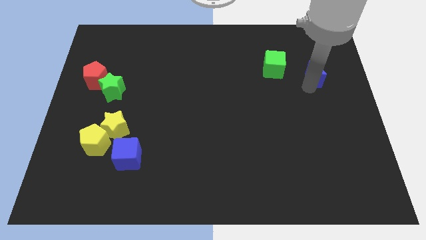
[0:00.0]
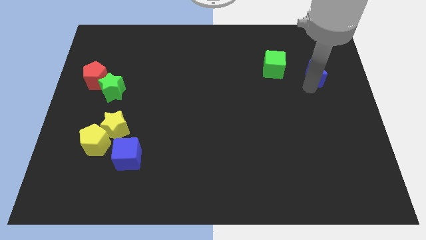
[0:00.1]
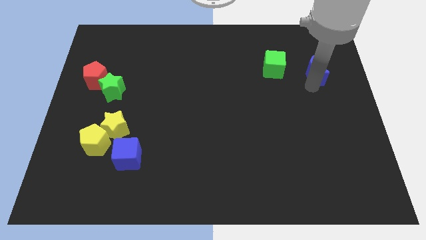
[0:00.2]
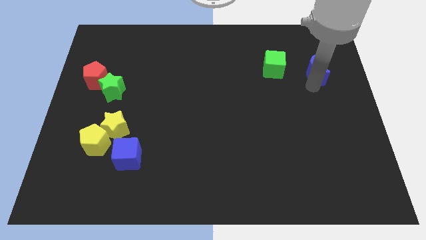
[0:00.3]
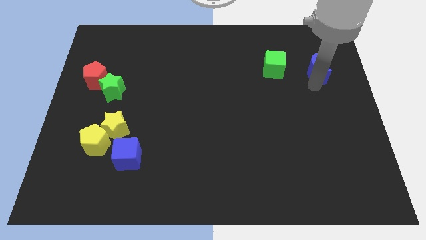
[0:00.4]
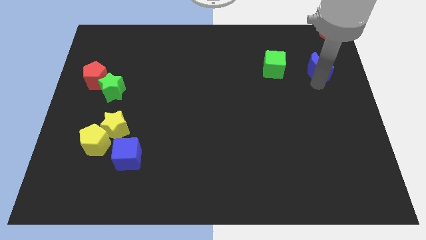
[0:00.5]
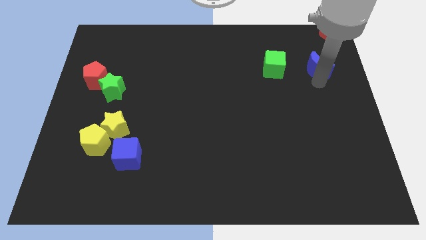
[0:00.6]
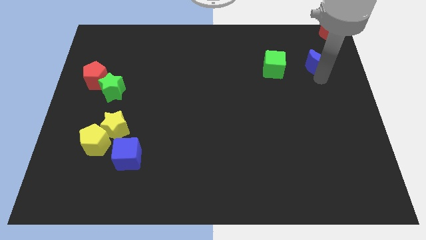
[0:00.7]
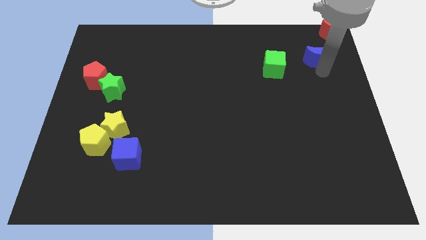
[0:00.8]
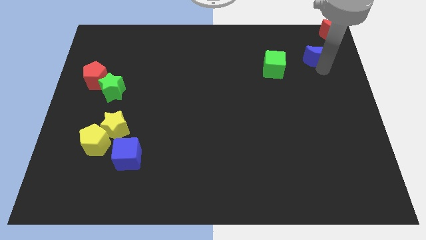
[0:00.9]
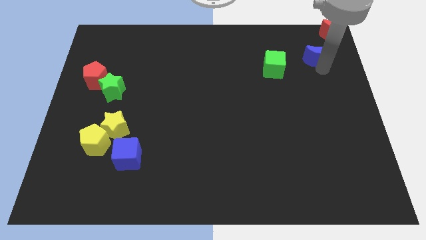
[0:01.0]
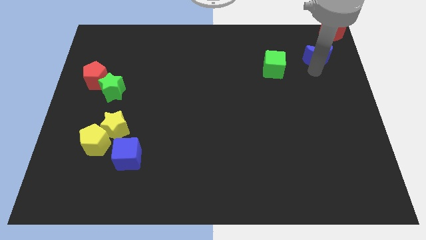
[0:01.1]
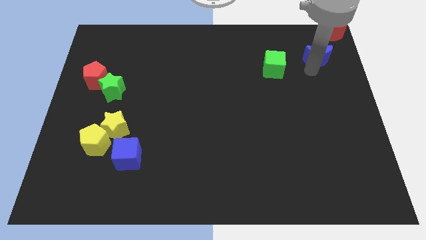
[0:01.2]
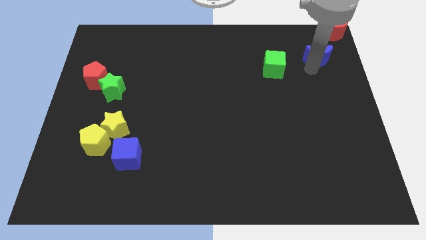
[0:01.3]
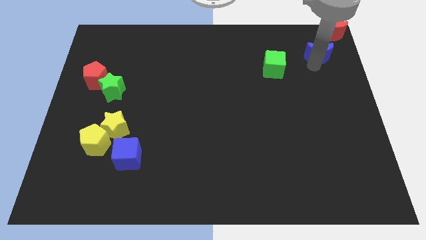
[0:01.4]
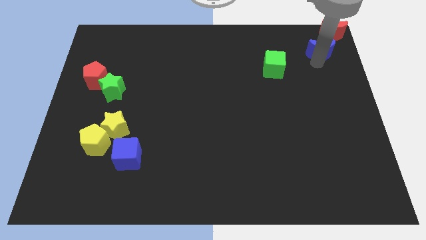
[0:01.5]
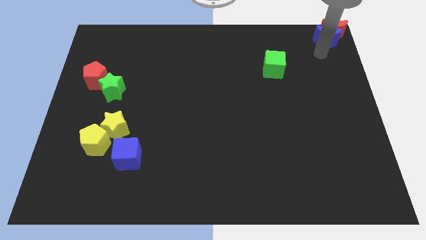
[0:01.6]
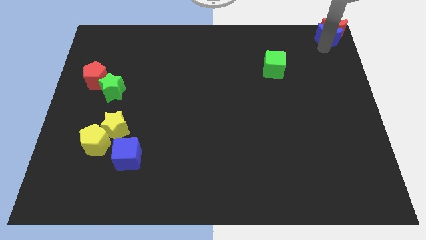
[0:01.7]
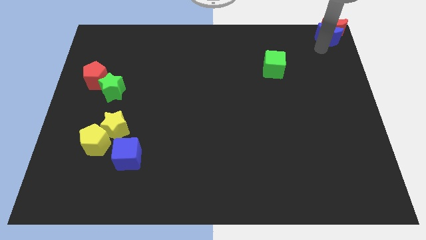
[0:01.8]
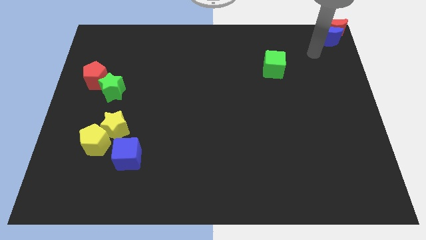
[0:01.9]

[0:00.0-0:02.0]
move the blue crescent into the red crescent

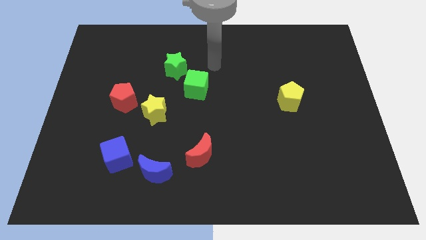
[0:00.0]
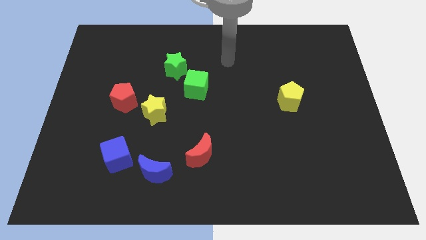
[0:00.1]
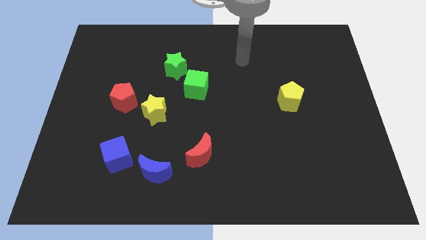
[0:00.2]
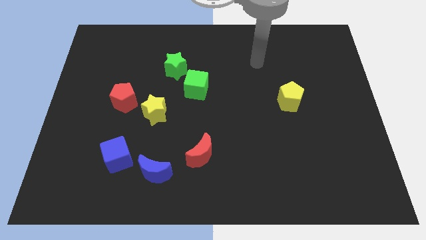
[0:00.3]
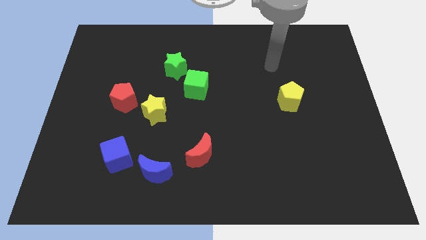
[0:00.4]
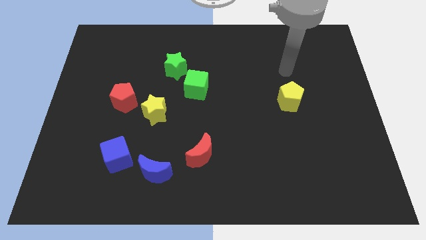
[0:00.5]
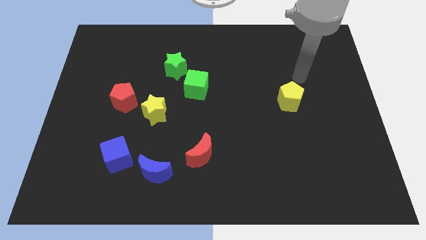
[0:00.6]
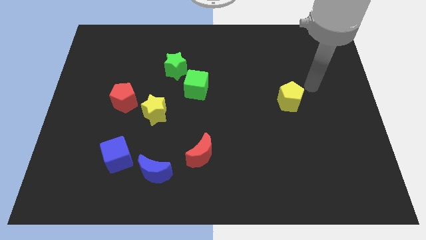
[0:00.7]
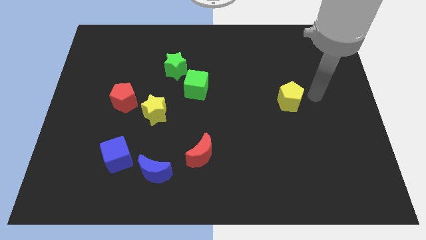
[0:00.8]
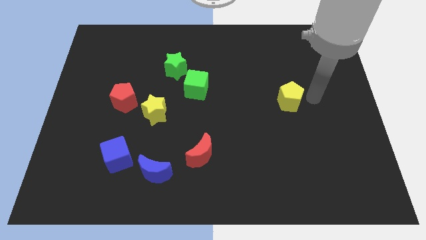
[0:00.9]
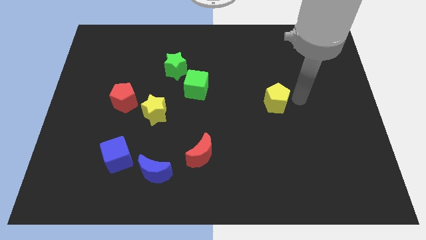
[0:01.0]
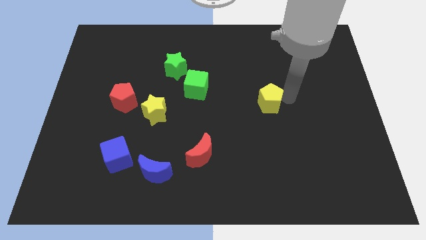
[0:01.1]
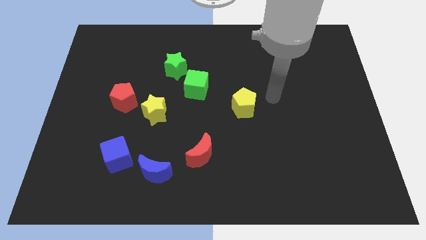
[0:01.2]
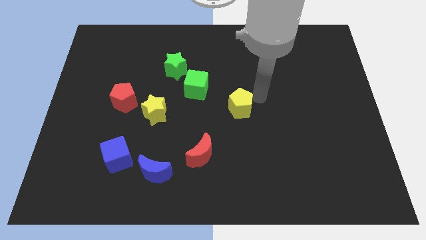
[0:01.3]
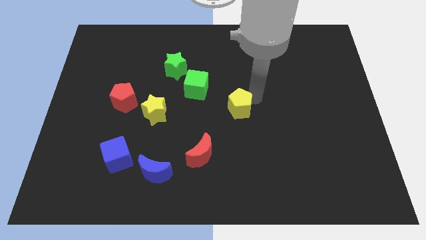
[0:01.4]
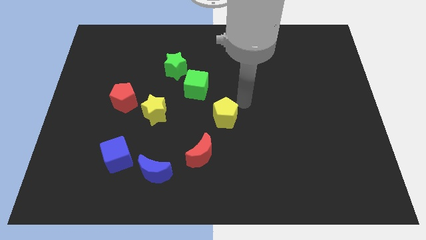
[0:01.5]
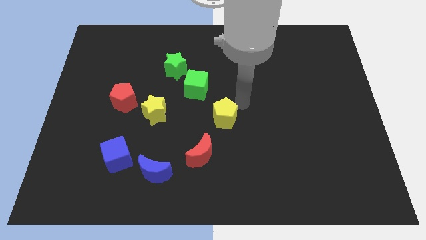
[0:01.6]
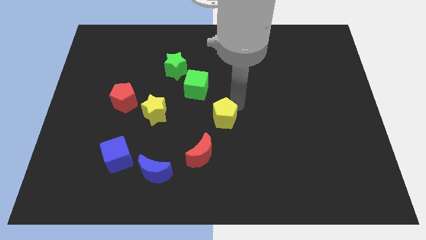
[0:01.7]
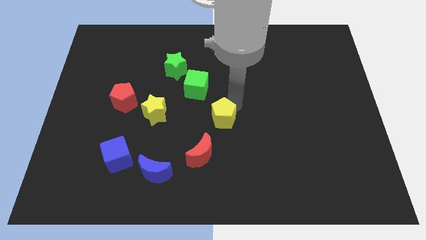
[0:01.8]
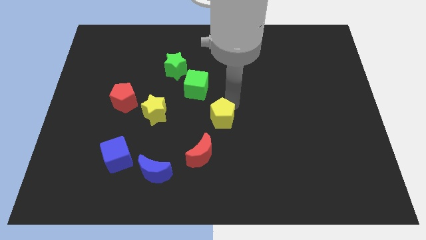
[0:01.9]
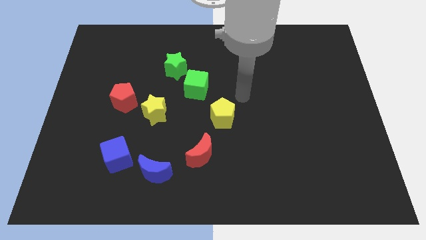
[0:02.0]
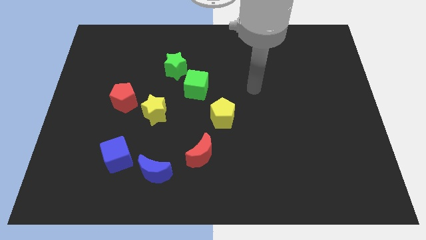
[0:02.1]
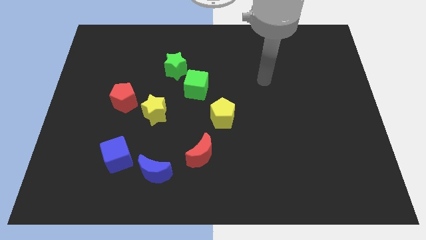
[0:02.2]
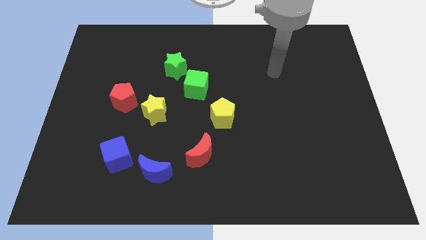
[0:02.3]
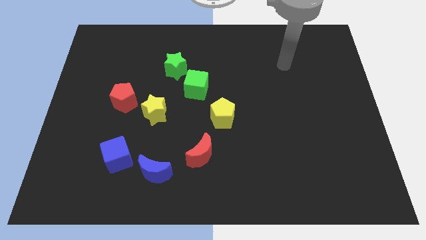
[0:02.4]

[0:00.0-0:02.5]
push the yellow pentagon to the top side of the red moon

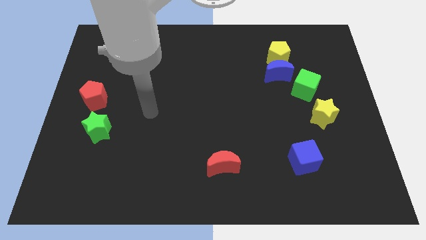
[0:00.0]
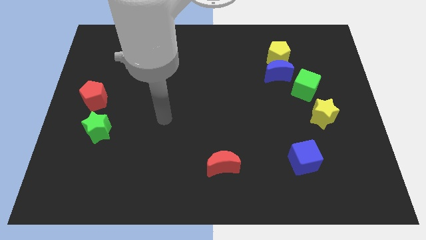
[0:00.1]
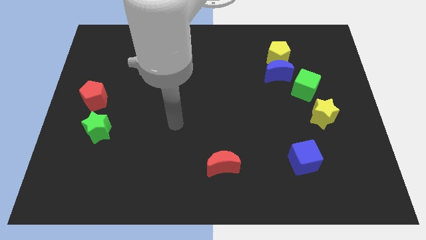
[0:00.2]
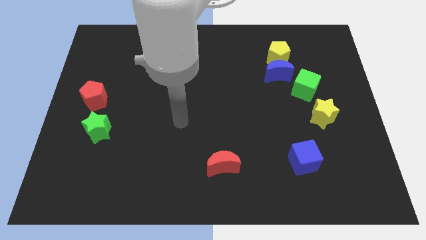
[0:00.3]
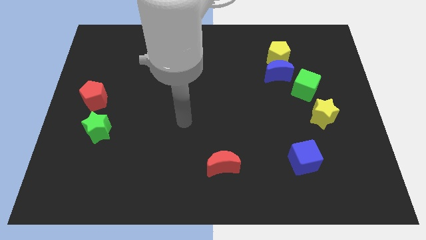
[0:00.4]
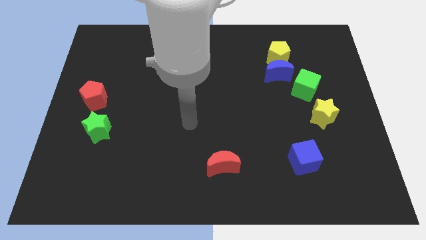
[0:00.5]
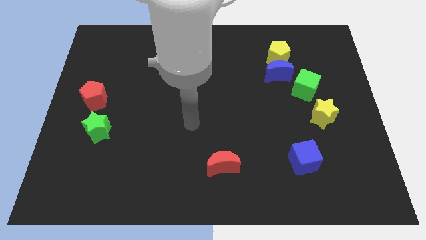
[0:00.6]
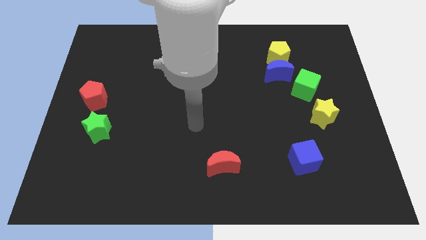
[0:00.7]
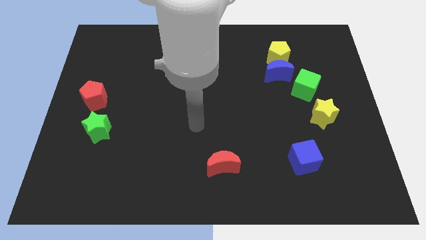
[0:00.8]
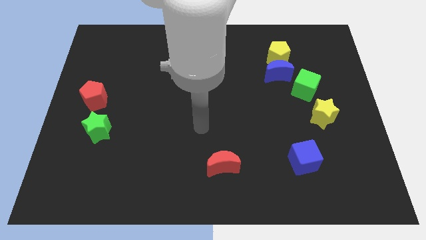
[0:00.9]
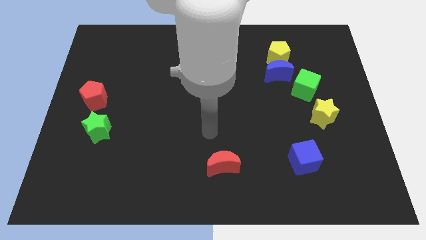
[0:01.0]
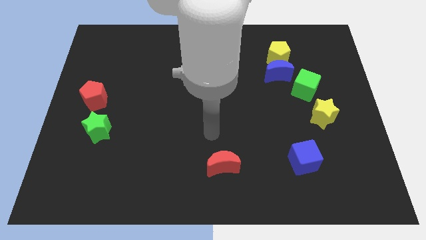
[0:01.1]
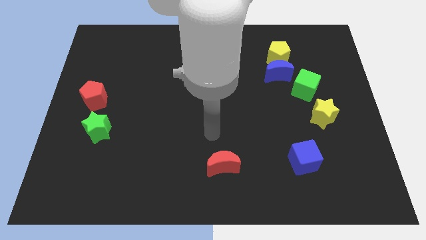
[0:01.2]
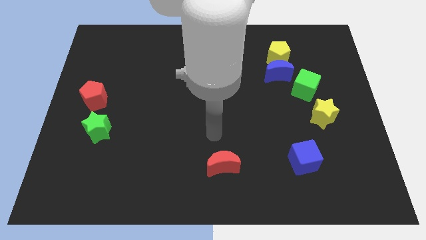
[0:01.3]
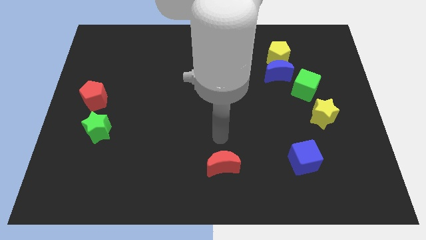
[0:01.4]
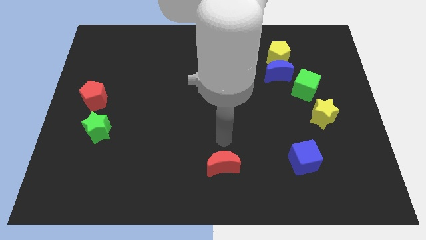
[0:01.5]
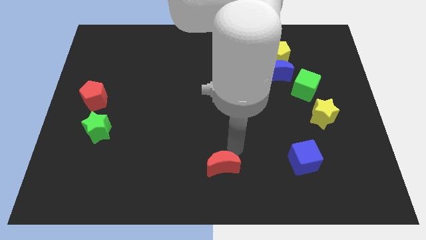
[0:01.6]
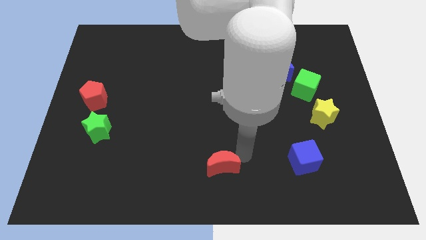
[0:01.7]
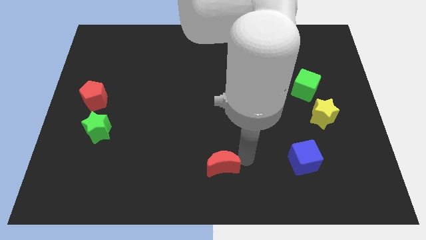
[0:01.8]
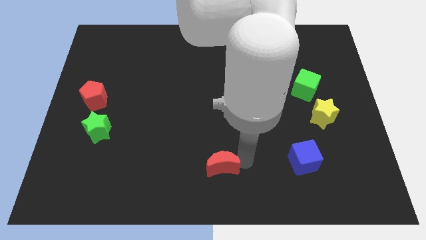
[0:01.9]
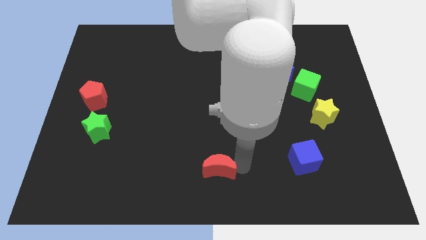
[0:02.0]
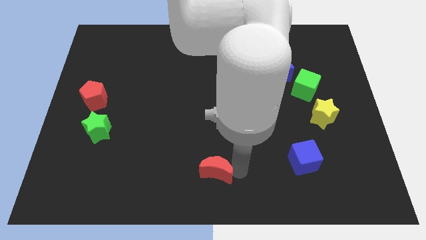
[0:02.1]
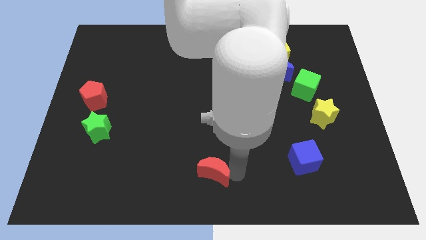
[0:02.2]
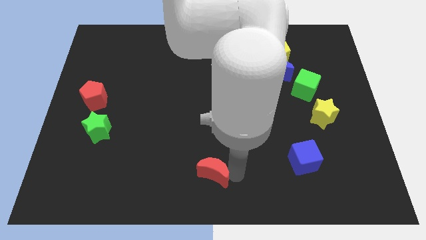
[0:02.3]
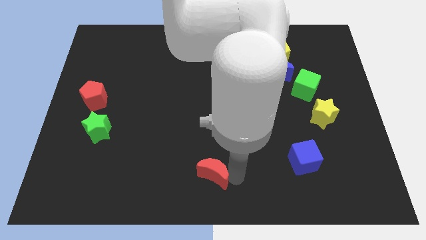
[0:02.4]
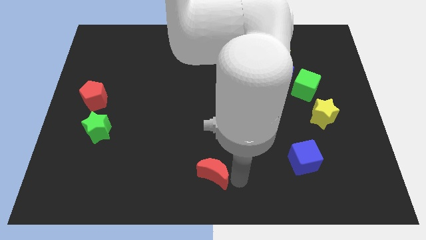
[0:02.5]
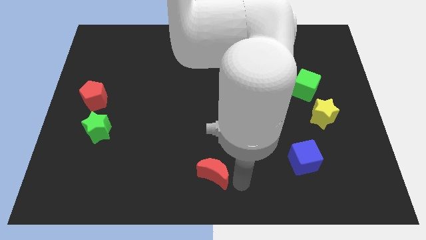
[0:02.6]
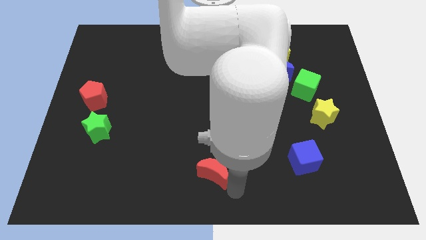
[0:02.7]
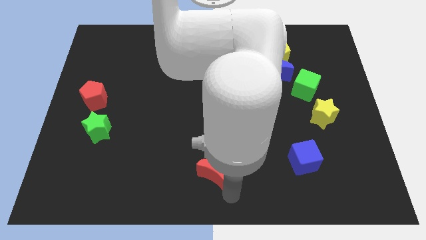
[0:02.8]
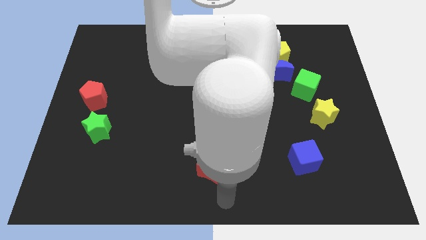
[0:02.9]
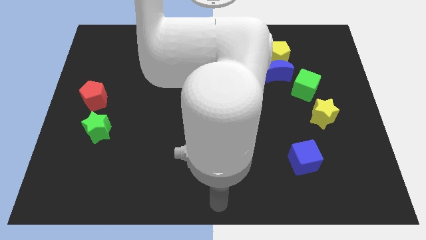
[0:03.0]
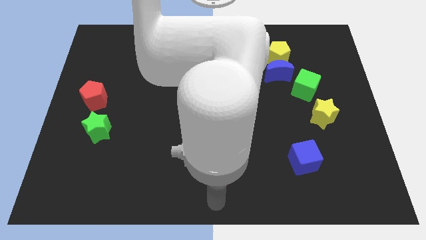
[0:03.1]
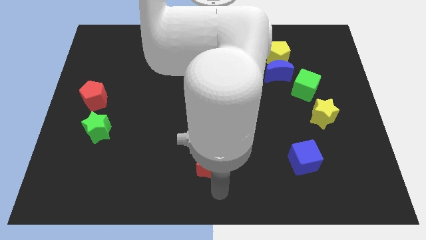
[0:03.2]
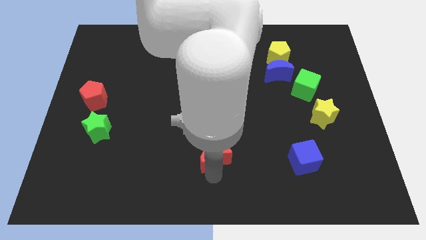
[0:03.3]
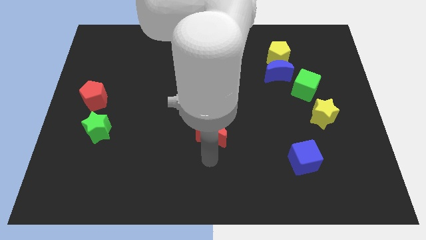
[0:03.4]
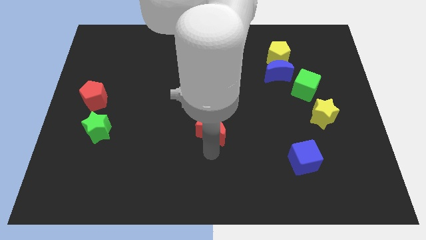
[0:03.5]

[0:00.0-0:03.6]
move the red moon diagonally top left to the blue cube

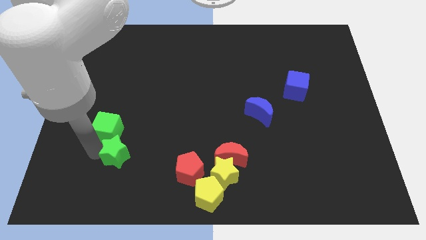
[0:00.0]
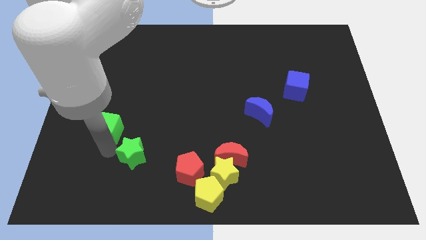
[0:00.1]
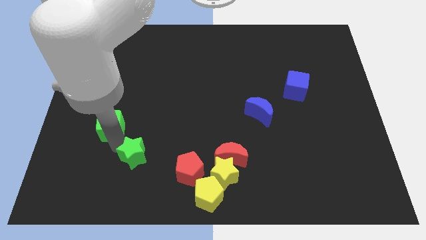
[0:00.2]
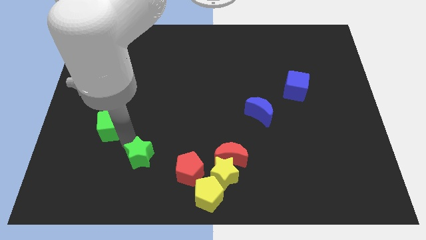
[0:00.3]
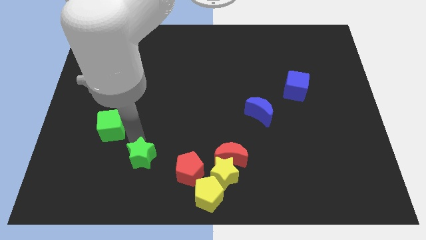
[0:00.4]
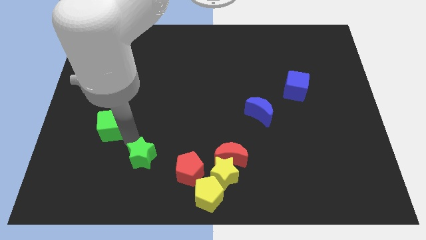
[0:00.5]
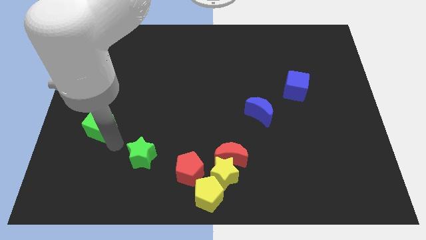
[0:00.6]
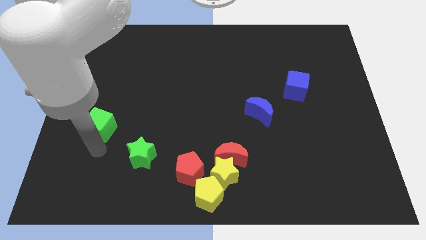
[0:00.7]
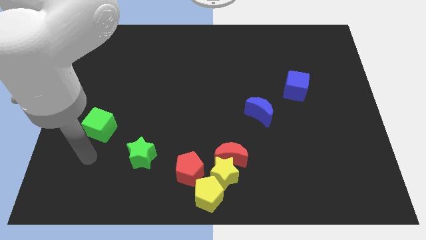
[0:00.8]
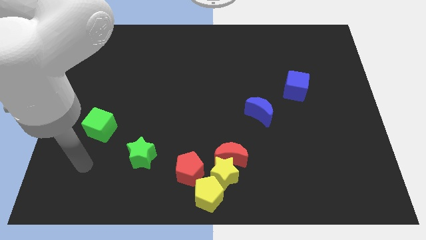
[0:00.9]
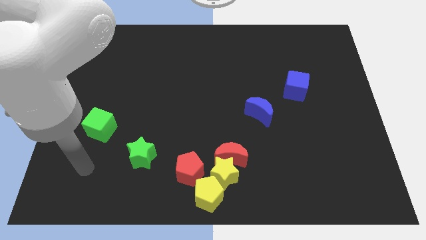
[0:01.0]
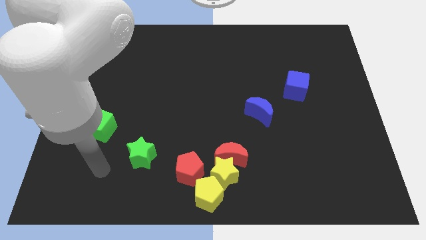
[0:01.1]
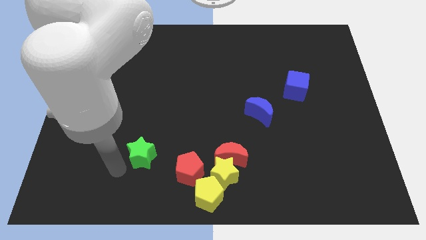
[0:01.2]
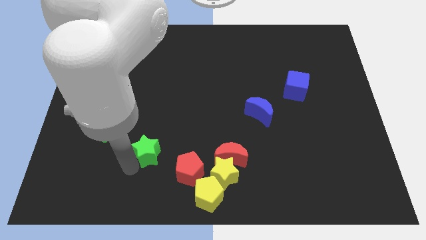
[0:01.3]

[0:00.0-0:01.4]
separate the green star from the green cube
